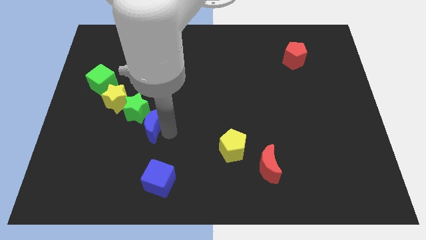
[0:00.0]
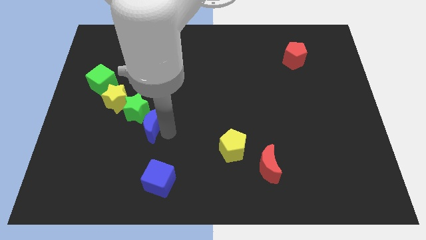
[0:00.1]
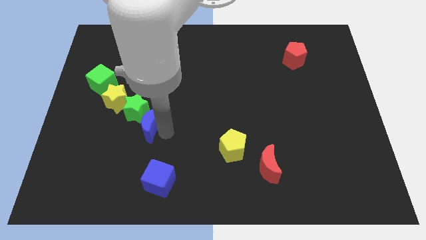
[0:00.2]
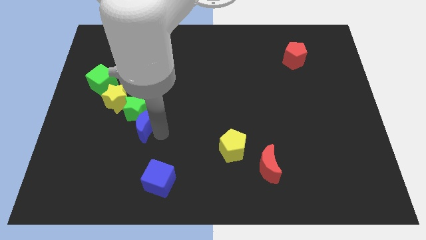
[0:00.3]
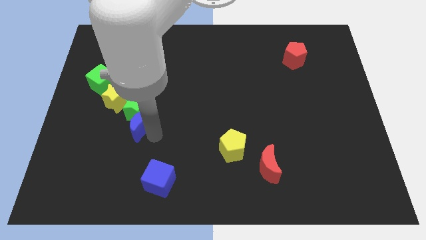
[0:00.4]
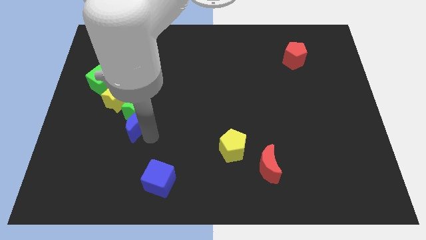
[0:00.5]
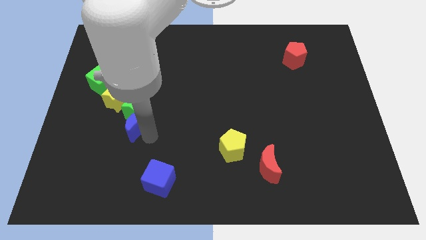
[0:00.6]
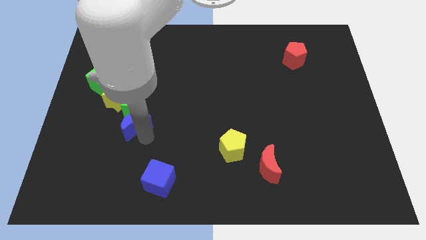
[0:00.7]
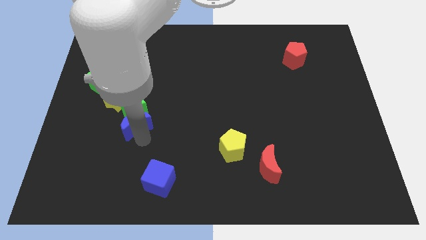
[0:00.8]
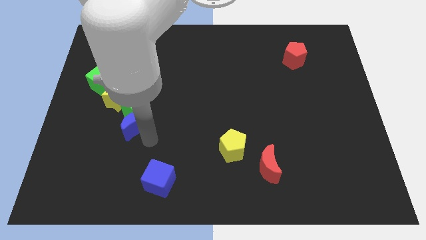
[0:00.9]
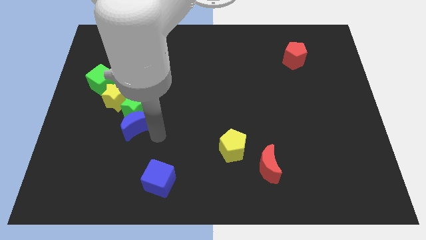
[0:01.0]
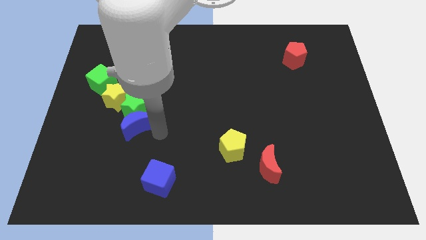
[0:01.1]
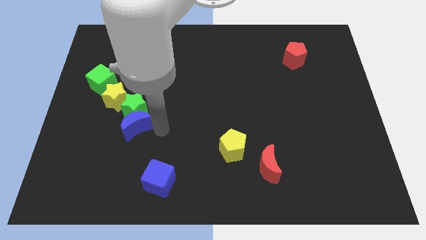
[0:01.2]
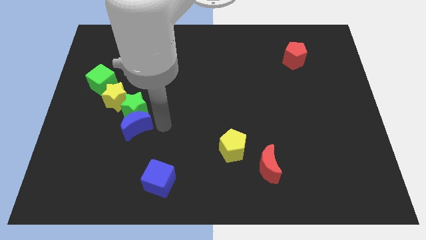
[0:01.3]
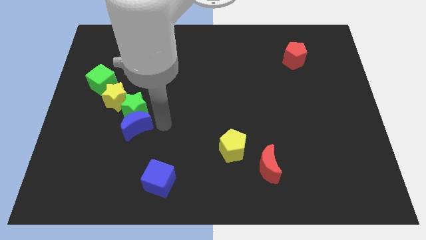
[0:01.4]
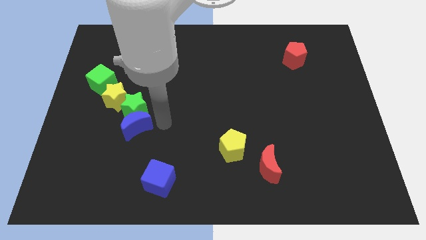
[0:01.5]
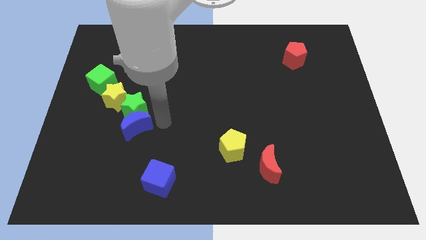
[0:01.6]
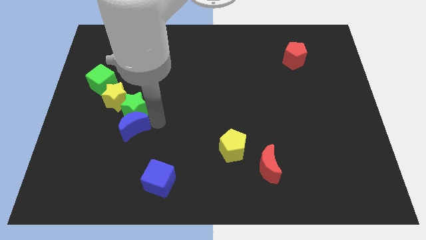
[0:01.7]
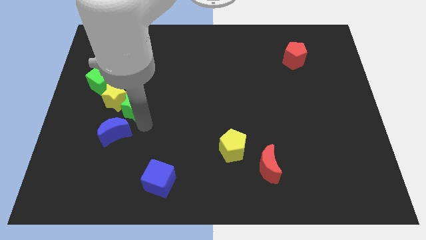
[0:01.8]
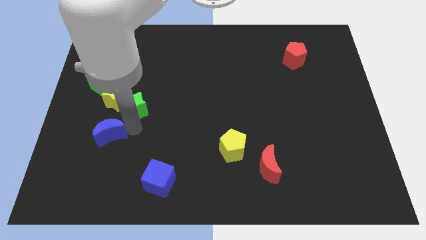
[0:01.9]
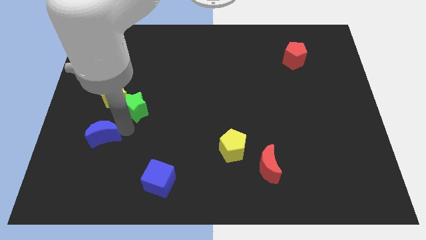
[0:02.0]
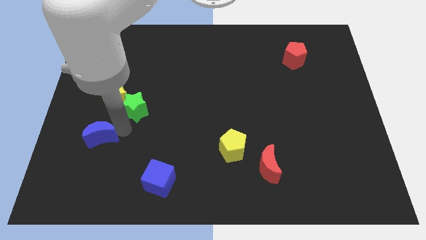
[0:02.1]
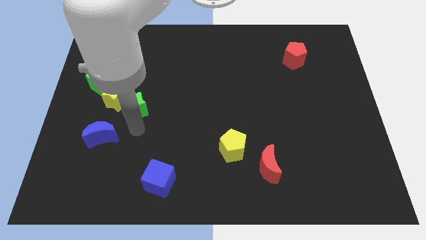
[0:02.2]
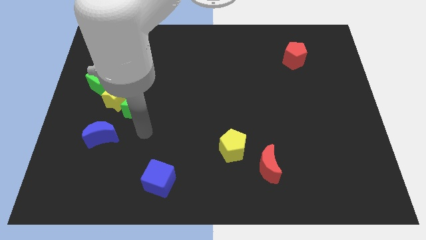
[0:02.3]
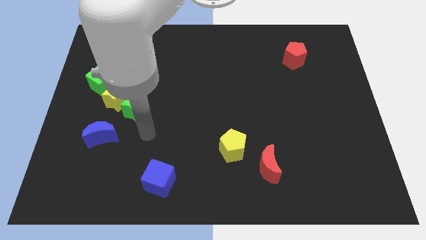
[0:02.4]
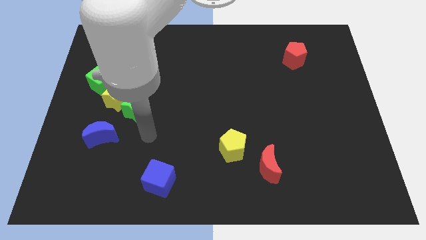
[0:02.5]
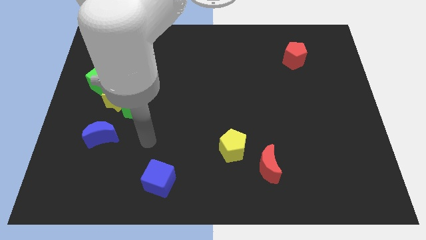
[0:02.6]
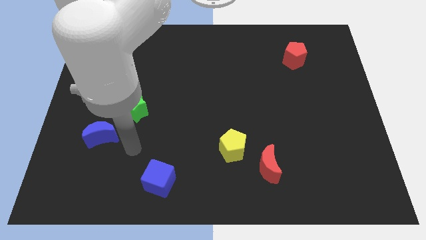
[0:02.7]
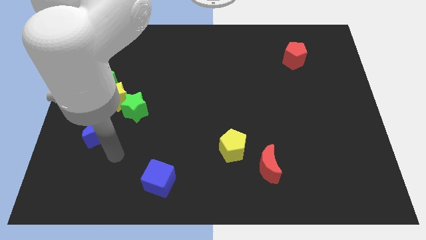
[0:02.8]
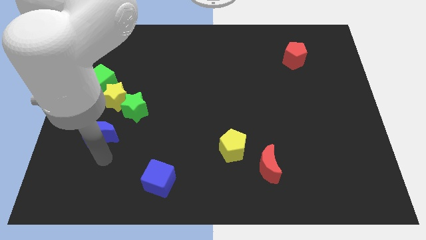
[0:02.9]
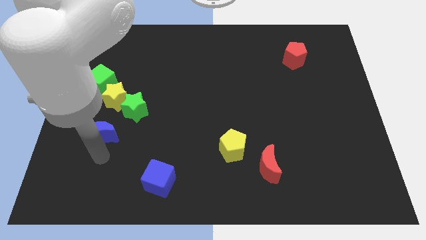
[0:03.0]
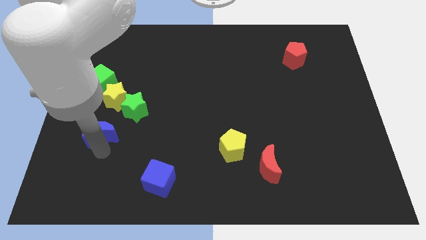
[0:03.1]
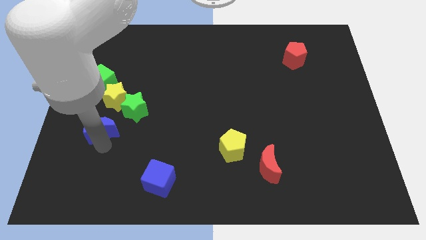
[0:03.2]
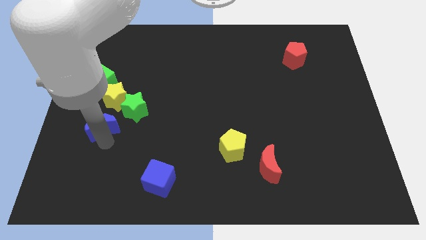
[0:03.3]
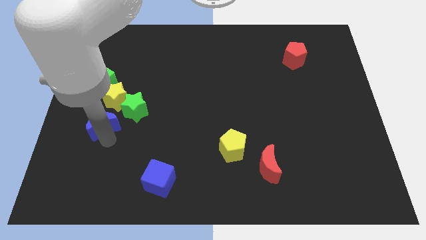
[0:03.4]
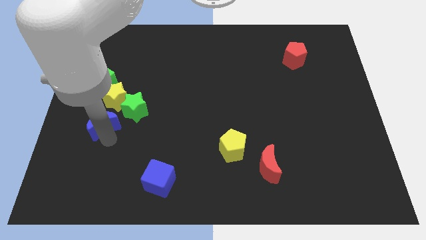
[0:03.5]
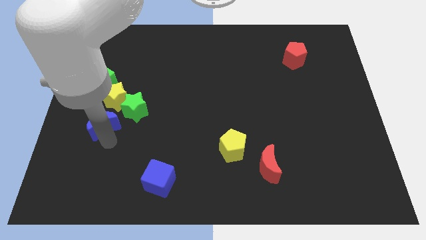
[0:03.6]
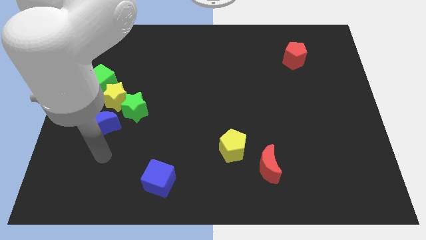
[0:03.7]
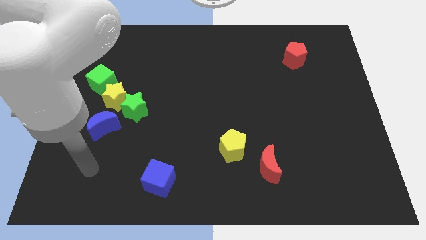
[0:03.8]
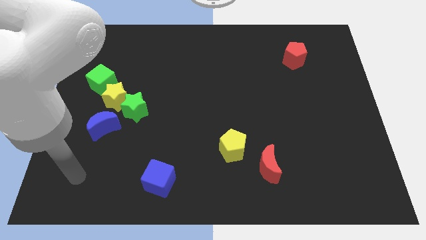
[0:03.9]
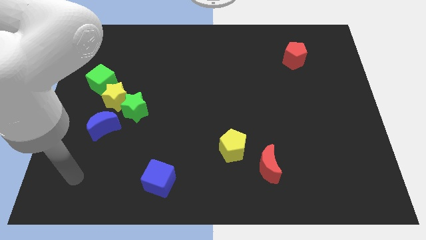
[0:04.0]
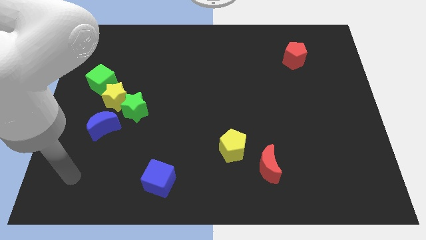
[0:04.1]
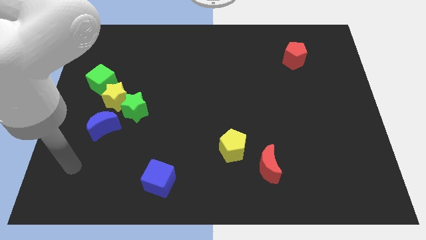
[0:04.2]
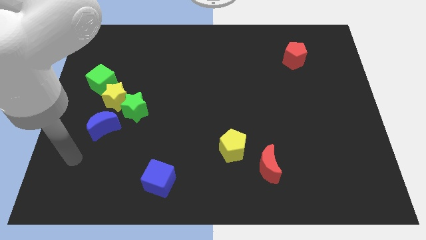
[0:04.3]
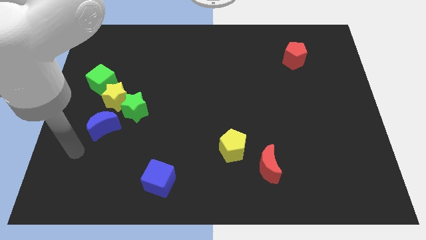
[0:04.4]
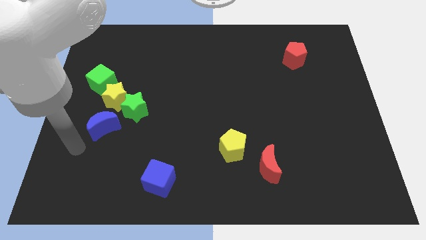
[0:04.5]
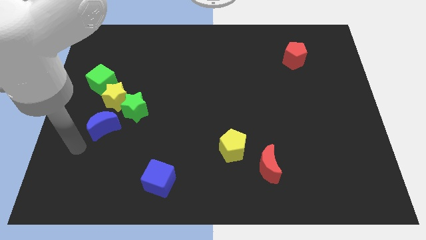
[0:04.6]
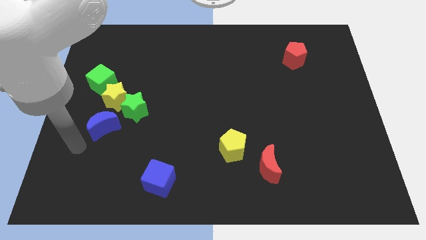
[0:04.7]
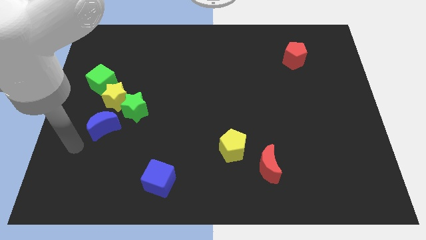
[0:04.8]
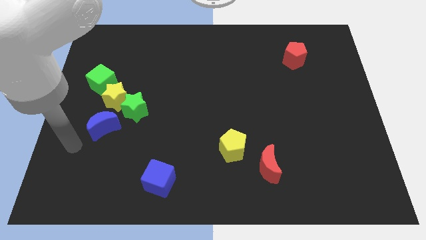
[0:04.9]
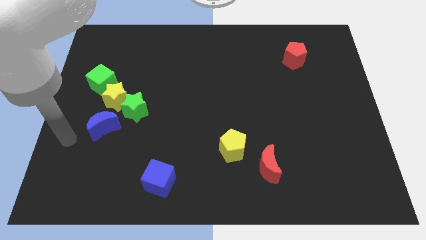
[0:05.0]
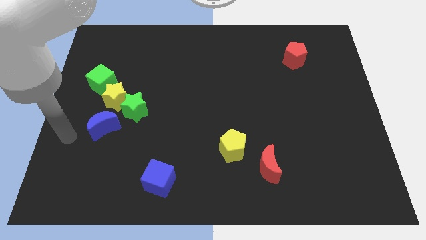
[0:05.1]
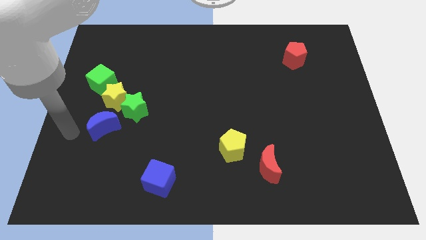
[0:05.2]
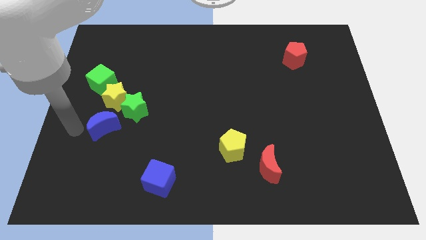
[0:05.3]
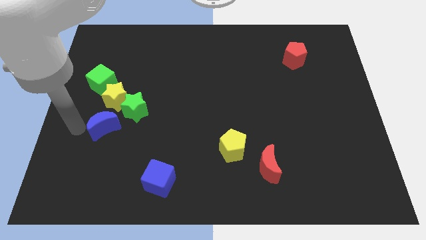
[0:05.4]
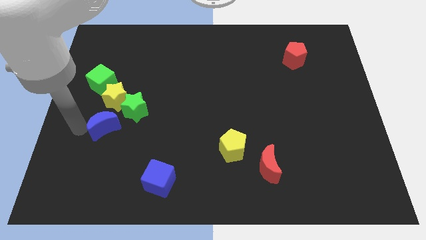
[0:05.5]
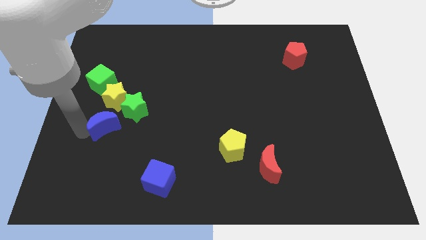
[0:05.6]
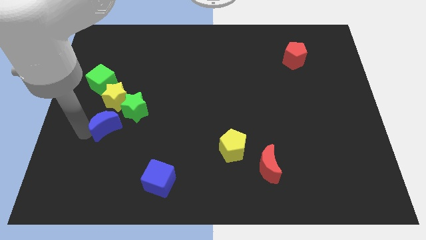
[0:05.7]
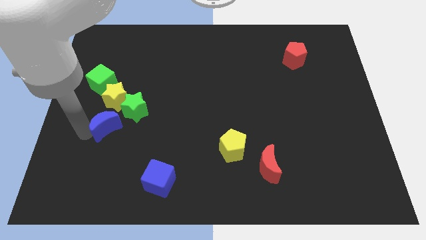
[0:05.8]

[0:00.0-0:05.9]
place the blue crescent below the yellow star

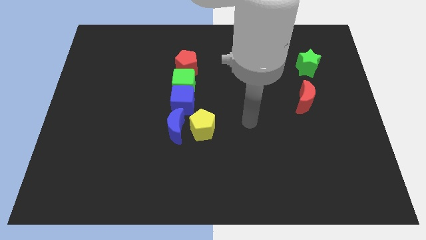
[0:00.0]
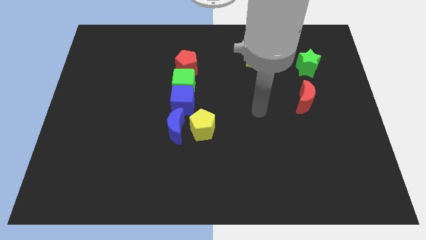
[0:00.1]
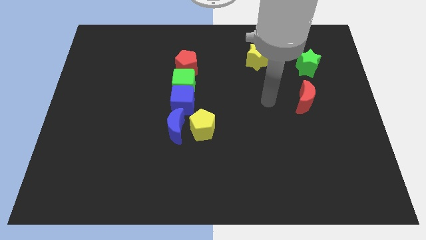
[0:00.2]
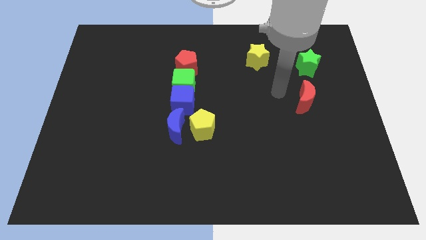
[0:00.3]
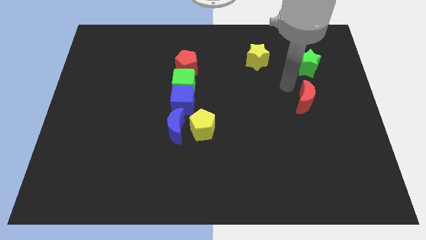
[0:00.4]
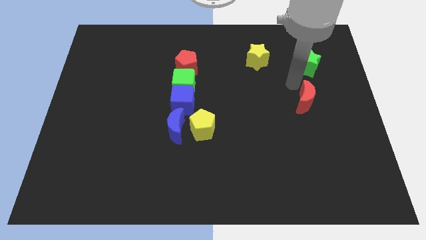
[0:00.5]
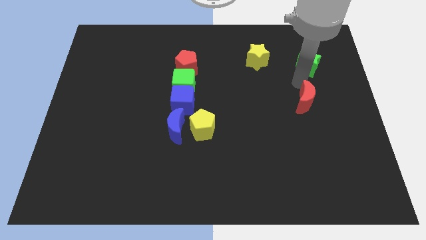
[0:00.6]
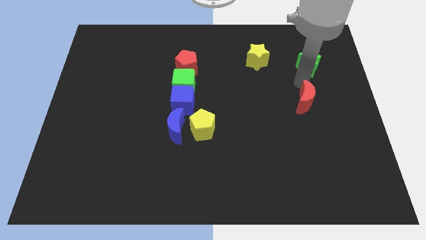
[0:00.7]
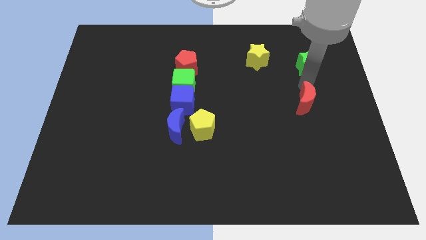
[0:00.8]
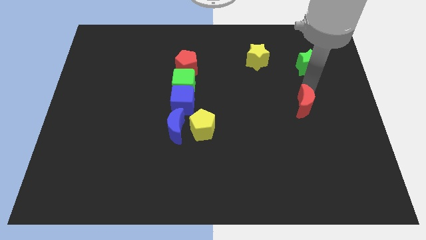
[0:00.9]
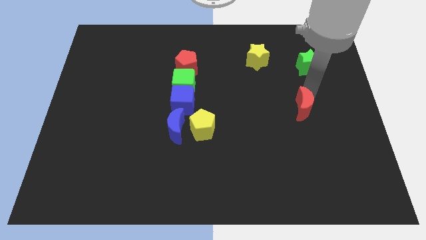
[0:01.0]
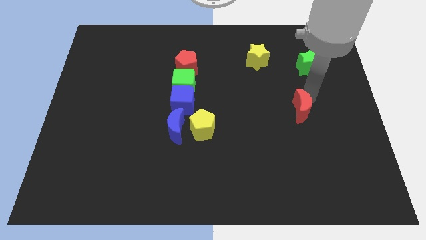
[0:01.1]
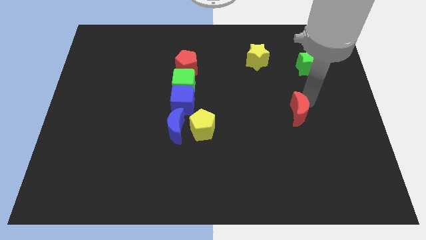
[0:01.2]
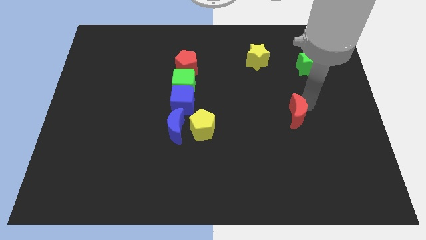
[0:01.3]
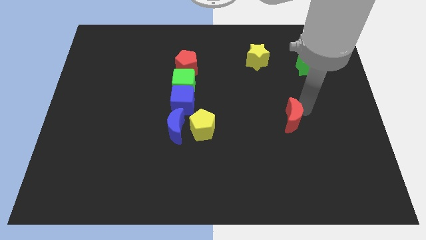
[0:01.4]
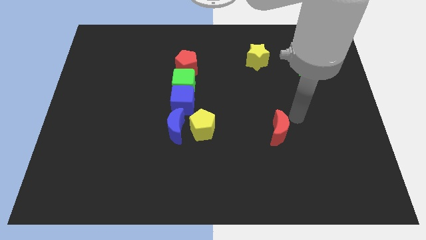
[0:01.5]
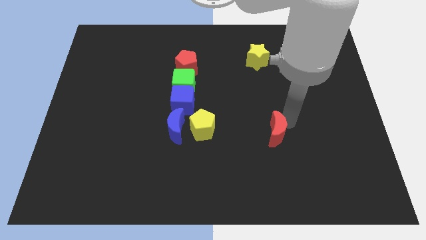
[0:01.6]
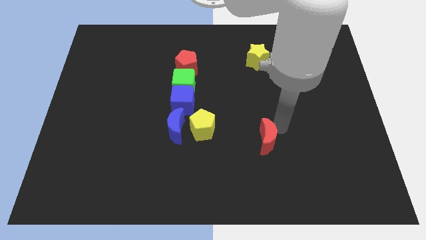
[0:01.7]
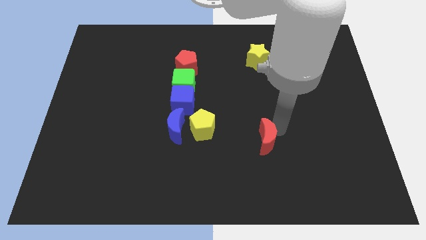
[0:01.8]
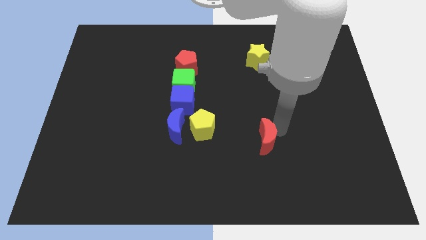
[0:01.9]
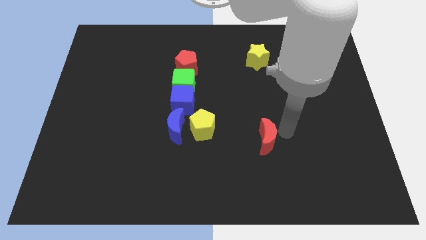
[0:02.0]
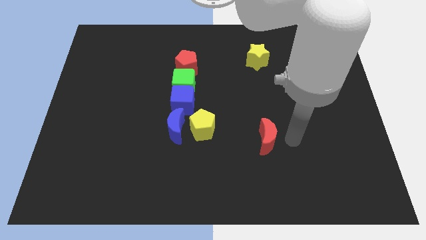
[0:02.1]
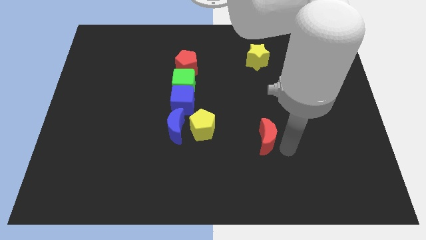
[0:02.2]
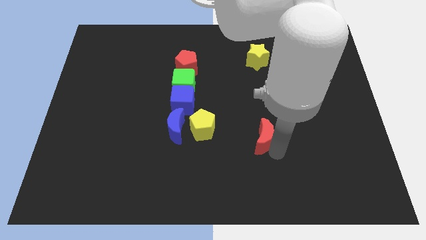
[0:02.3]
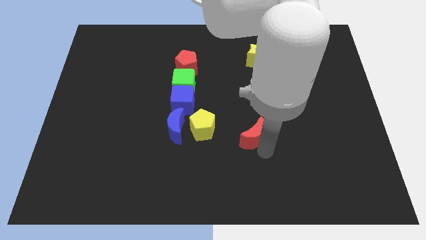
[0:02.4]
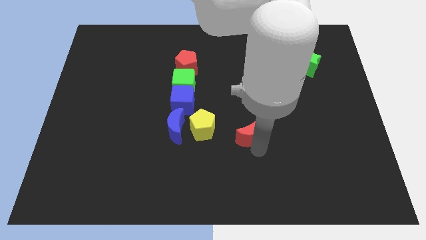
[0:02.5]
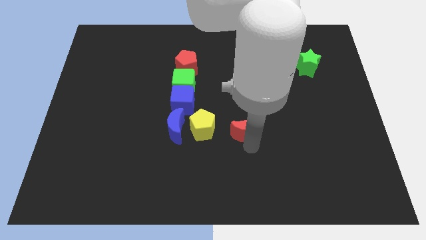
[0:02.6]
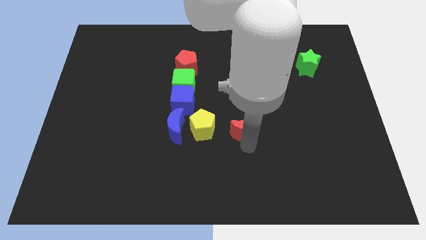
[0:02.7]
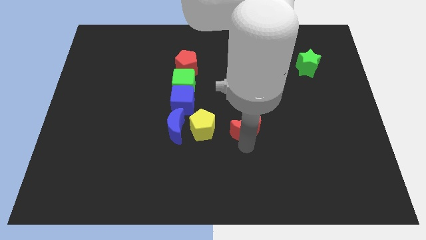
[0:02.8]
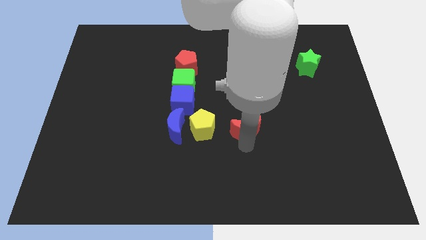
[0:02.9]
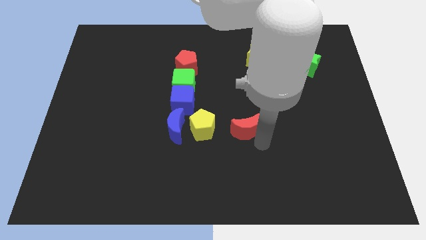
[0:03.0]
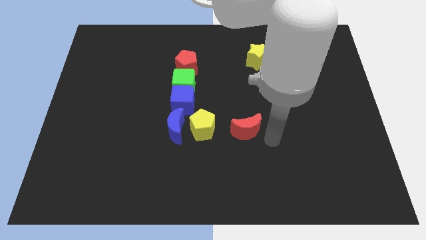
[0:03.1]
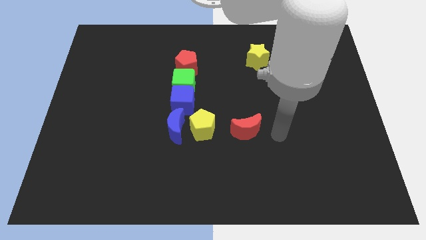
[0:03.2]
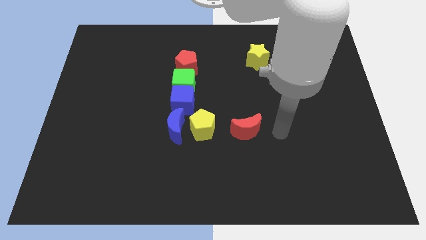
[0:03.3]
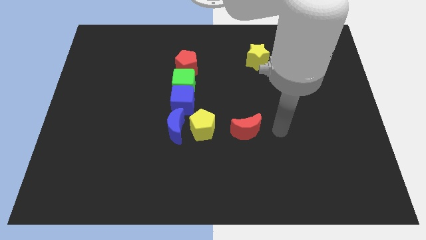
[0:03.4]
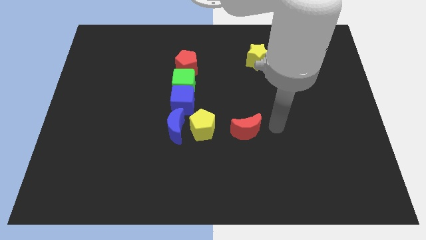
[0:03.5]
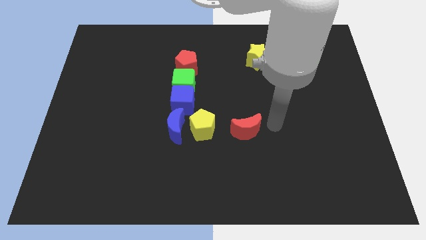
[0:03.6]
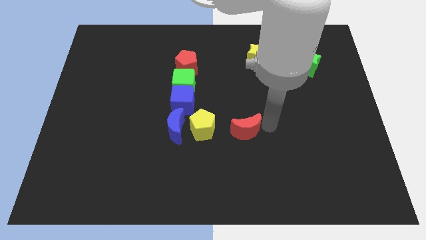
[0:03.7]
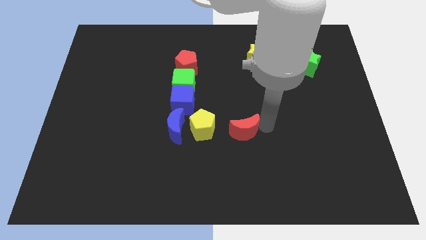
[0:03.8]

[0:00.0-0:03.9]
place red moon to the right of yellow pentagon
